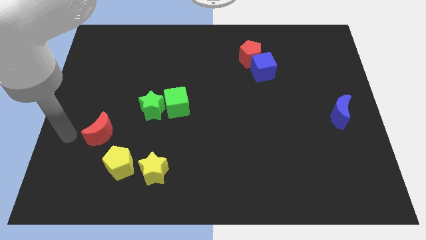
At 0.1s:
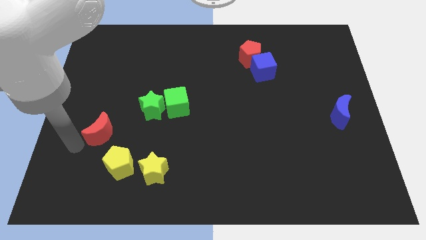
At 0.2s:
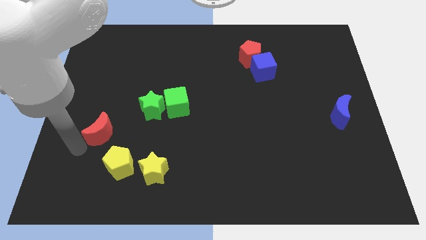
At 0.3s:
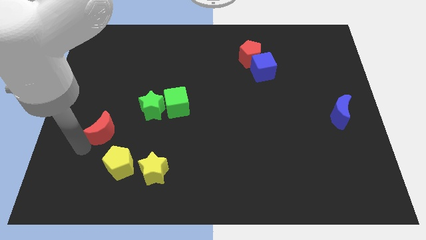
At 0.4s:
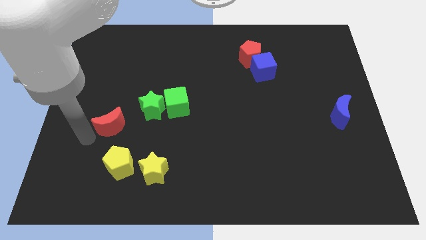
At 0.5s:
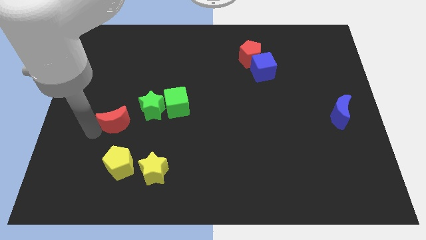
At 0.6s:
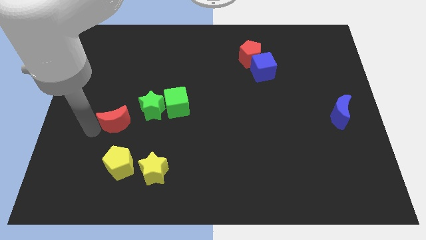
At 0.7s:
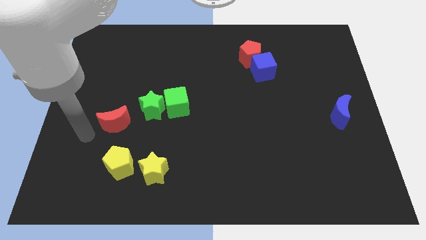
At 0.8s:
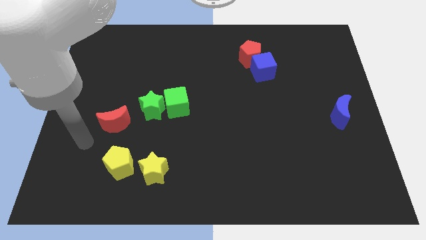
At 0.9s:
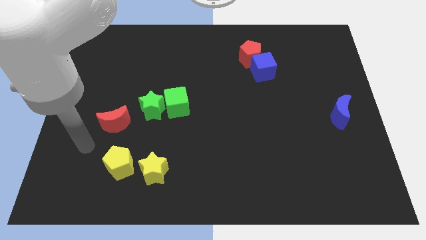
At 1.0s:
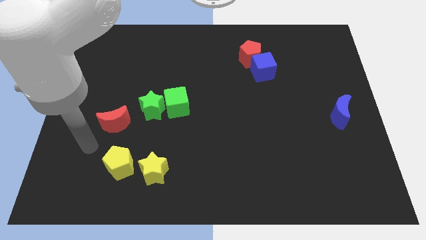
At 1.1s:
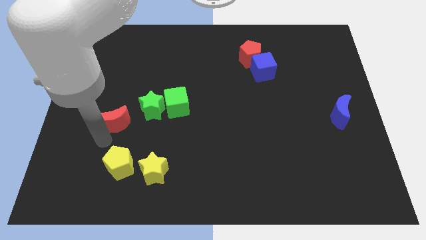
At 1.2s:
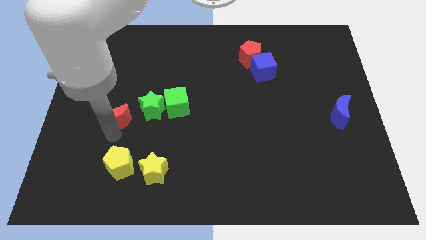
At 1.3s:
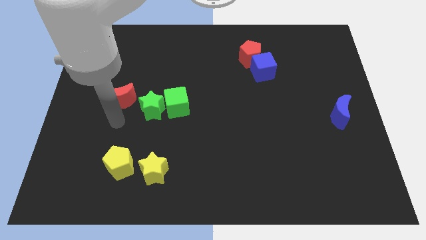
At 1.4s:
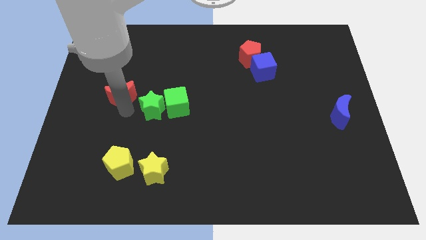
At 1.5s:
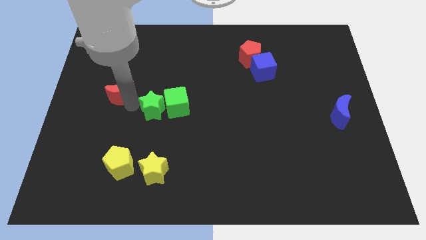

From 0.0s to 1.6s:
slightly move the red moon up

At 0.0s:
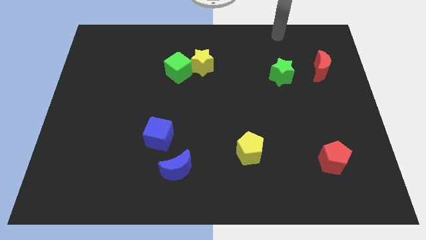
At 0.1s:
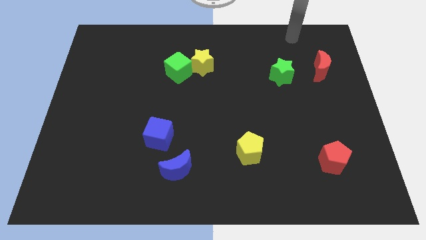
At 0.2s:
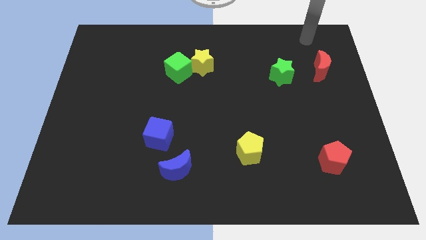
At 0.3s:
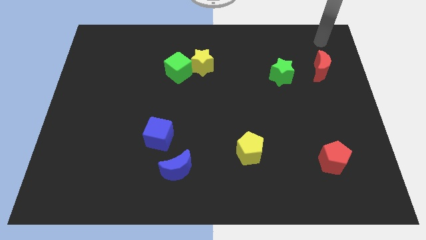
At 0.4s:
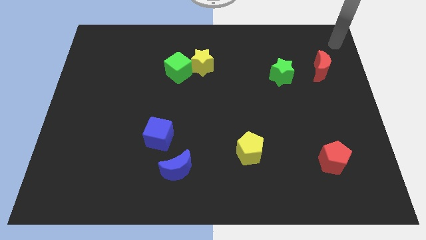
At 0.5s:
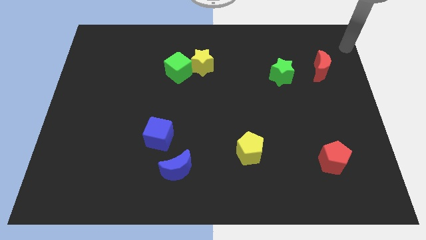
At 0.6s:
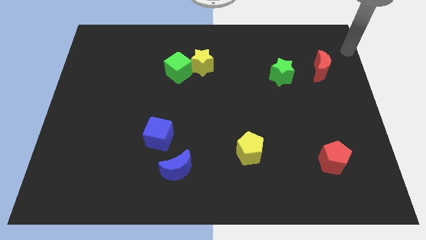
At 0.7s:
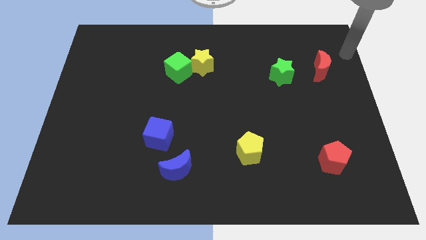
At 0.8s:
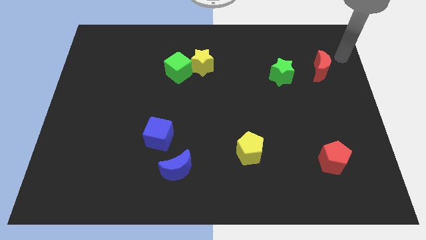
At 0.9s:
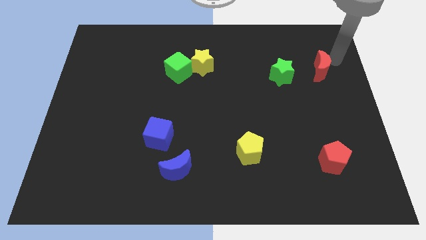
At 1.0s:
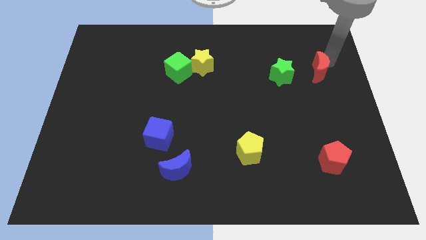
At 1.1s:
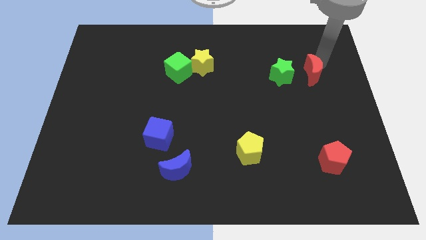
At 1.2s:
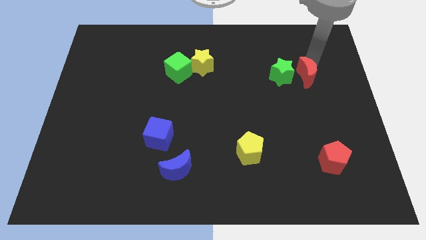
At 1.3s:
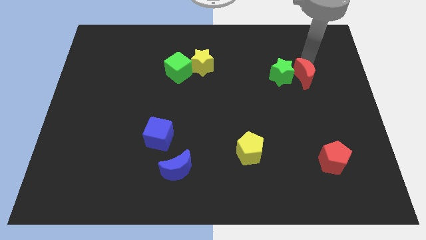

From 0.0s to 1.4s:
push the red crescent to the right of the green star

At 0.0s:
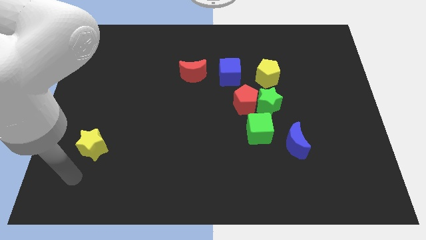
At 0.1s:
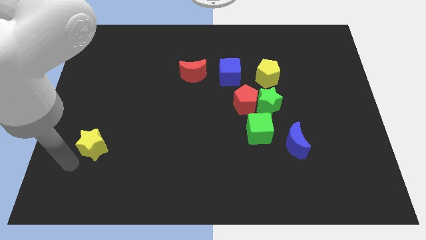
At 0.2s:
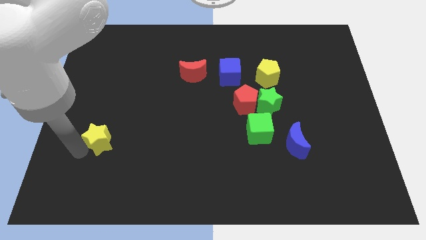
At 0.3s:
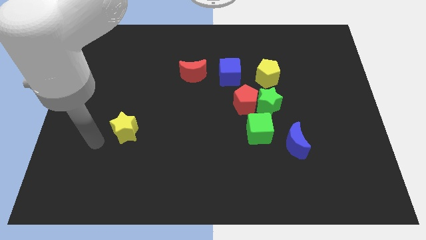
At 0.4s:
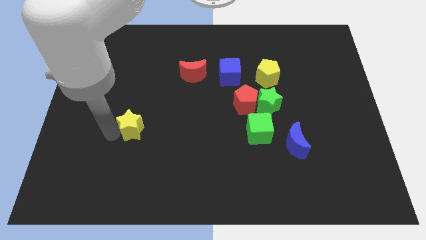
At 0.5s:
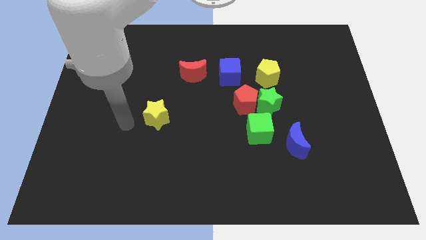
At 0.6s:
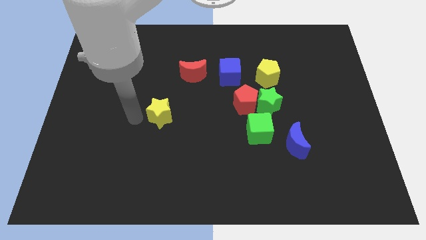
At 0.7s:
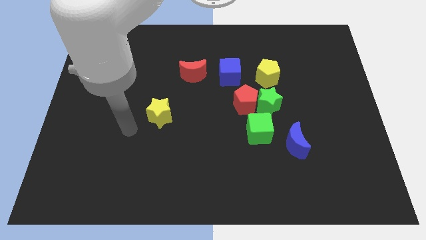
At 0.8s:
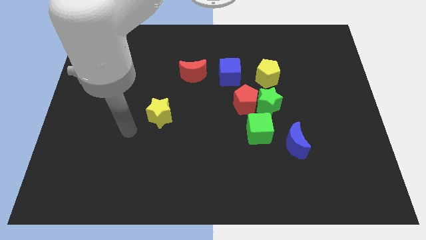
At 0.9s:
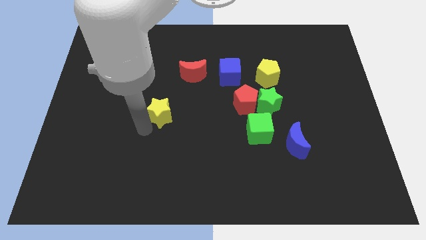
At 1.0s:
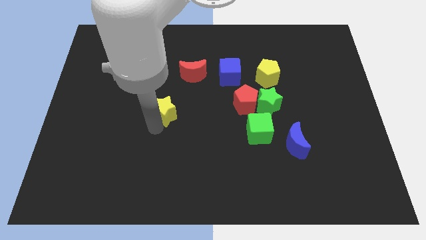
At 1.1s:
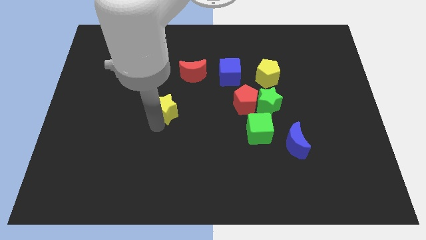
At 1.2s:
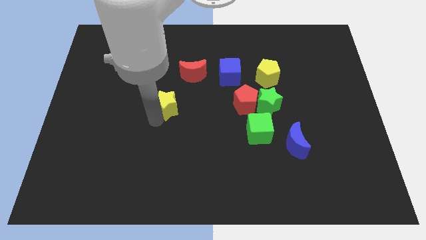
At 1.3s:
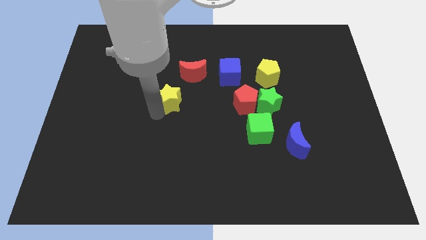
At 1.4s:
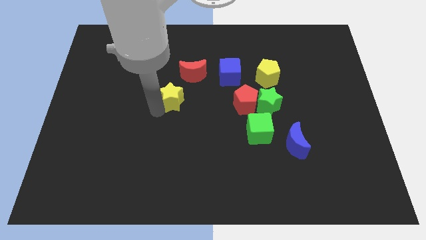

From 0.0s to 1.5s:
place the yellow star parallel to red pentagon

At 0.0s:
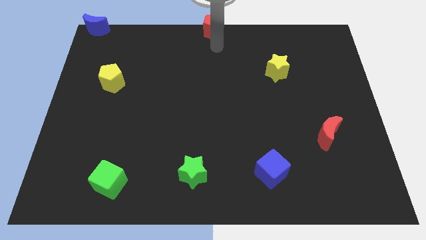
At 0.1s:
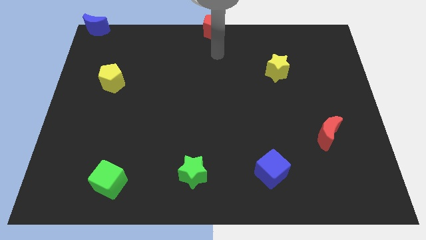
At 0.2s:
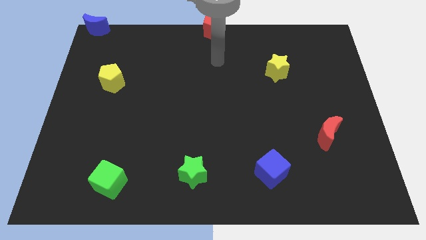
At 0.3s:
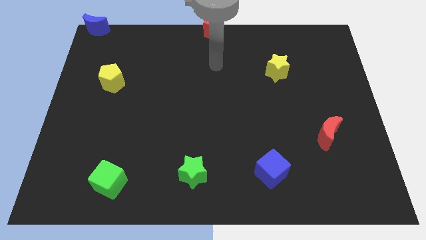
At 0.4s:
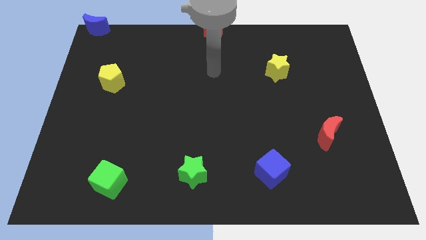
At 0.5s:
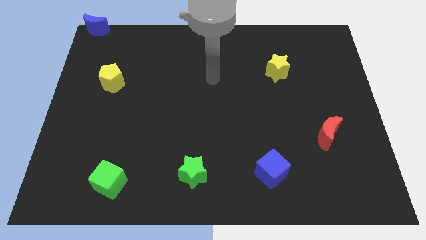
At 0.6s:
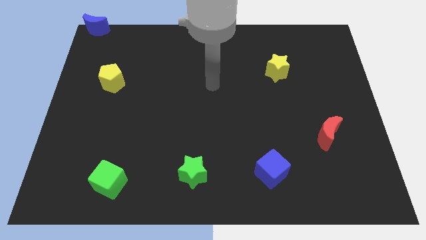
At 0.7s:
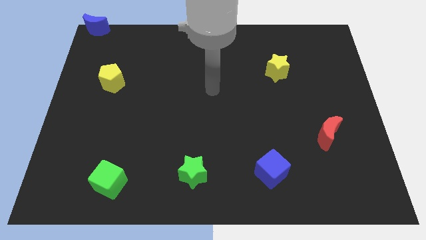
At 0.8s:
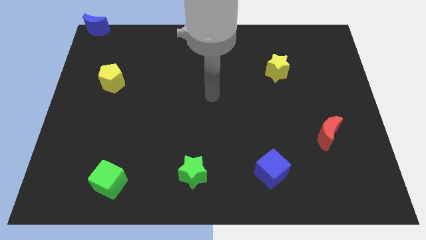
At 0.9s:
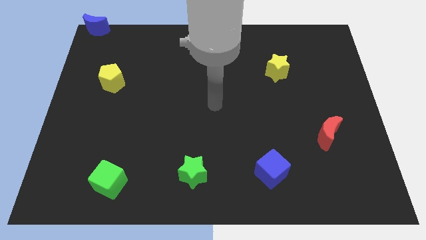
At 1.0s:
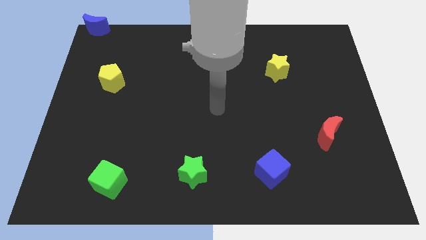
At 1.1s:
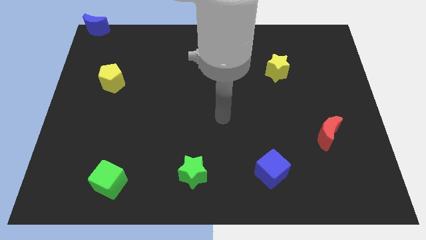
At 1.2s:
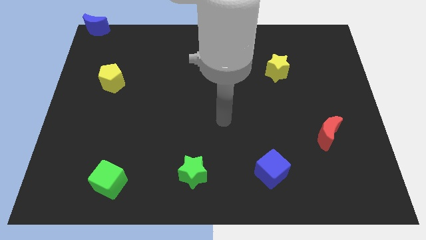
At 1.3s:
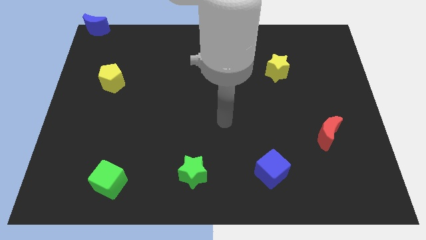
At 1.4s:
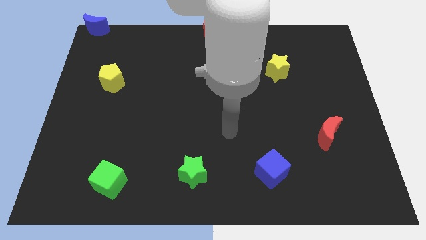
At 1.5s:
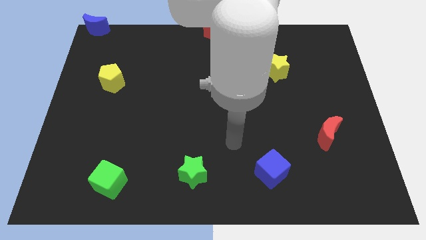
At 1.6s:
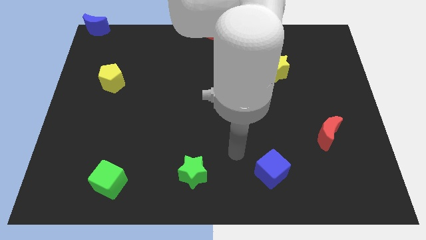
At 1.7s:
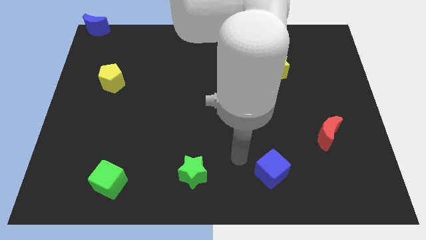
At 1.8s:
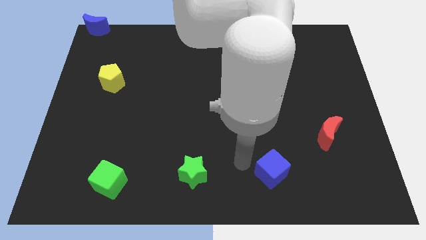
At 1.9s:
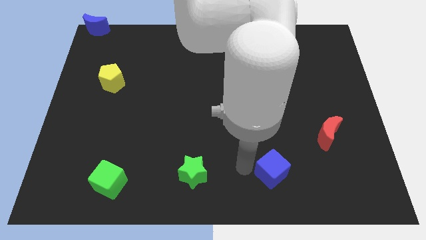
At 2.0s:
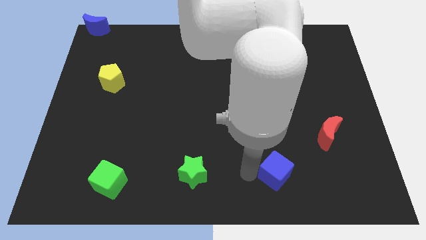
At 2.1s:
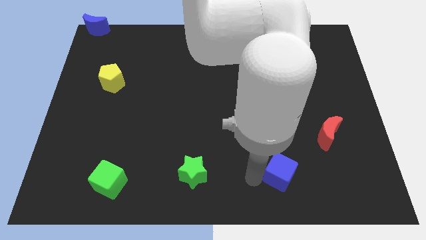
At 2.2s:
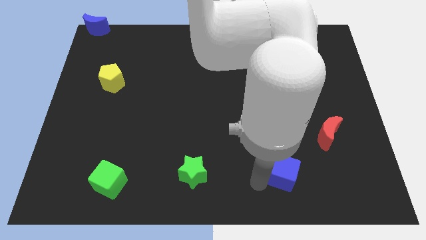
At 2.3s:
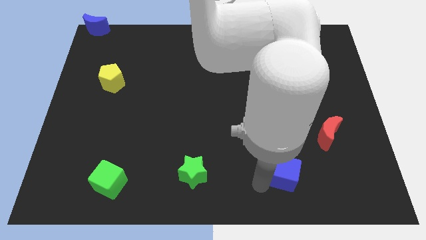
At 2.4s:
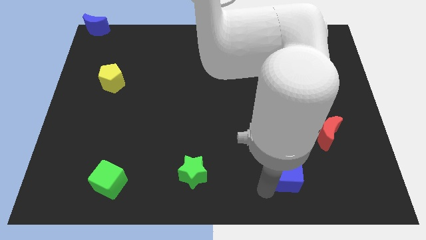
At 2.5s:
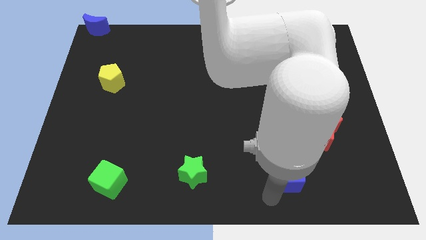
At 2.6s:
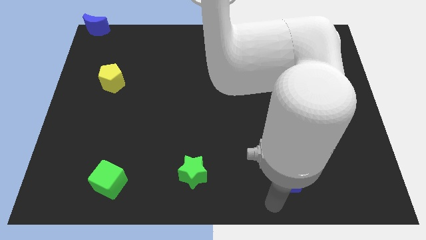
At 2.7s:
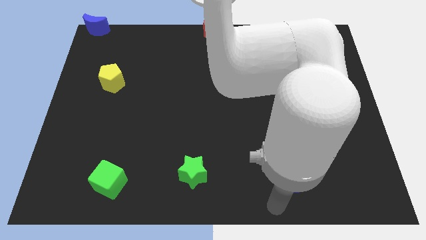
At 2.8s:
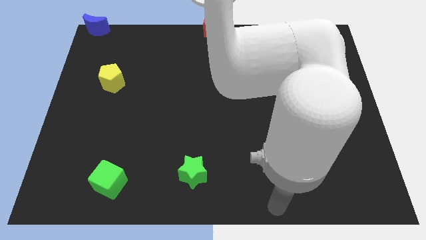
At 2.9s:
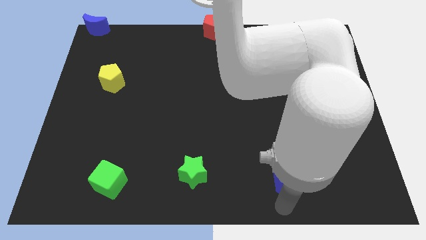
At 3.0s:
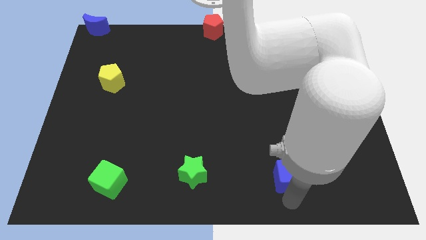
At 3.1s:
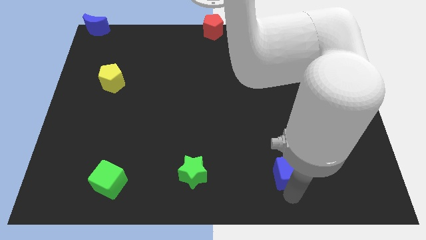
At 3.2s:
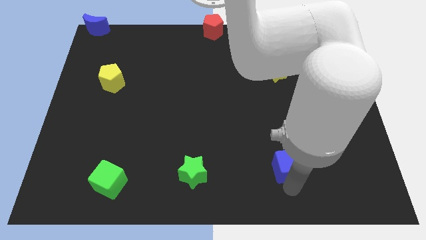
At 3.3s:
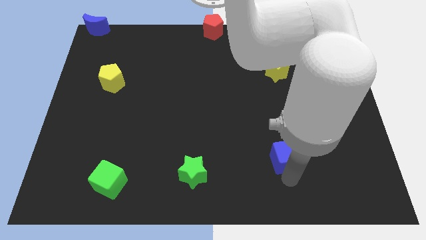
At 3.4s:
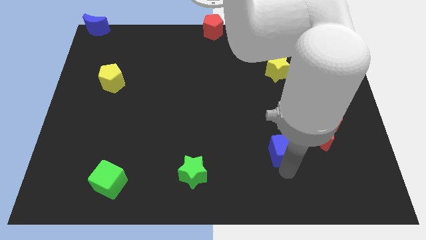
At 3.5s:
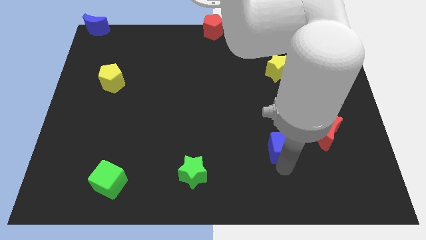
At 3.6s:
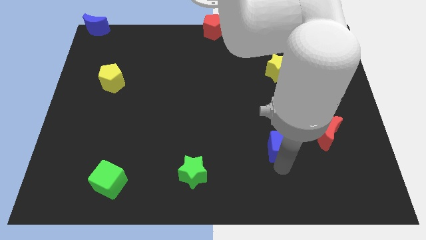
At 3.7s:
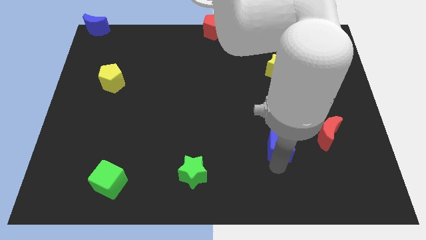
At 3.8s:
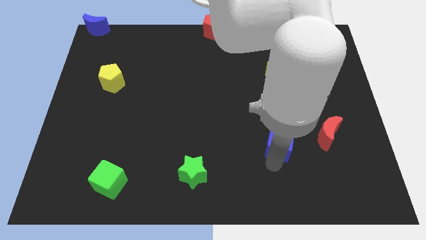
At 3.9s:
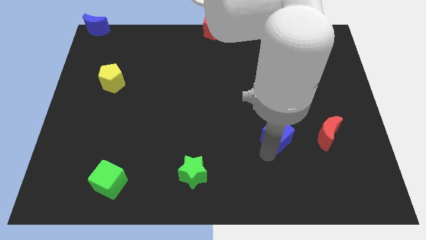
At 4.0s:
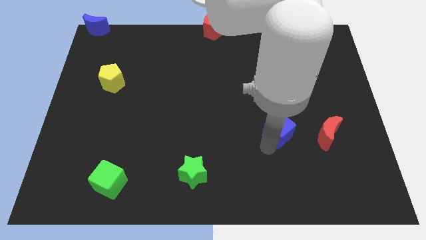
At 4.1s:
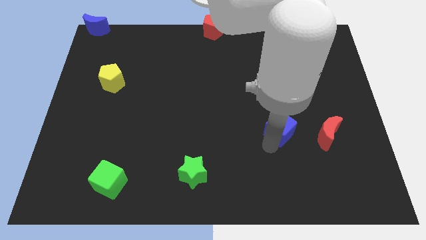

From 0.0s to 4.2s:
place blue cube to the left of red moon

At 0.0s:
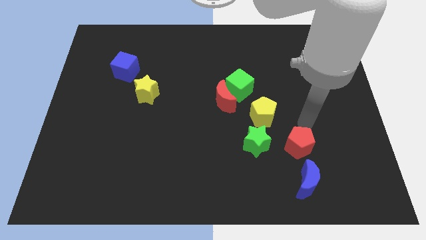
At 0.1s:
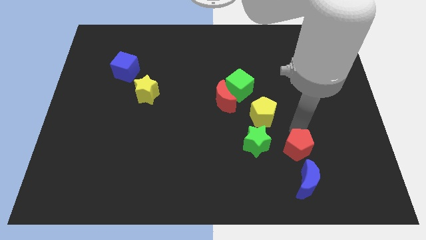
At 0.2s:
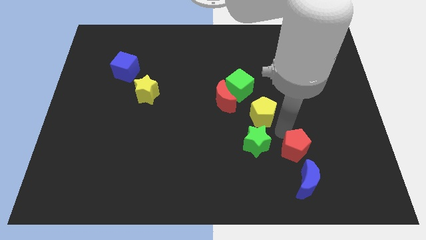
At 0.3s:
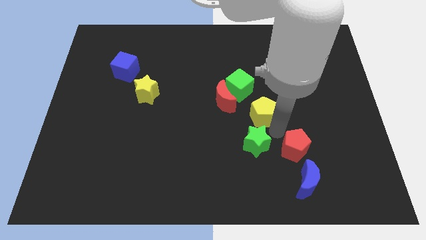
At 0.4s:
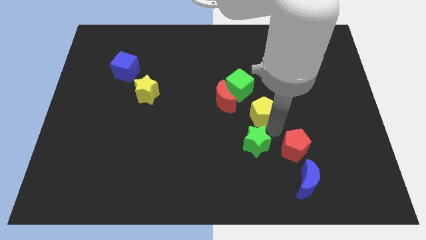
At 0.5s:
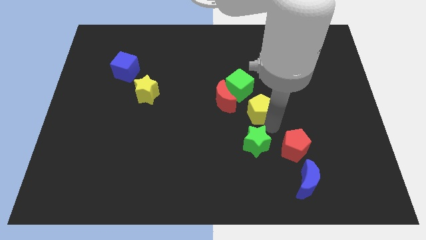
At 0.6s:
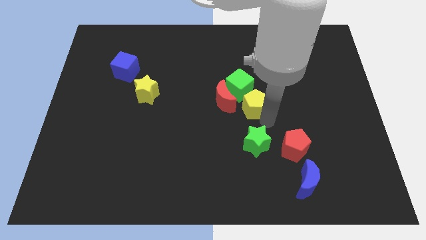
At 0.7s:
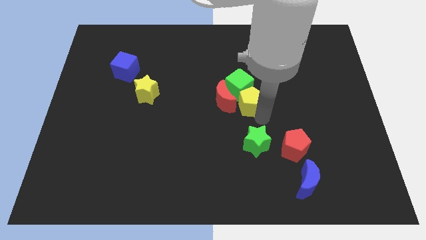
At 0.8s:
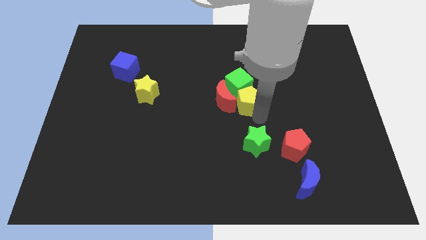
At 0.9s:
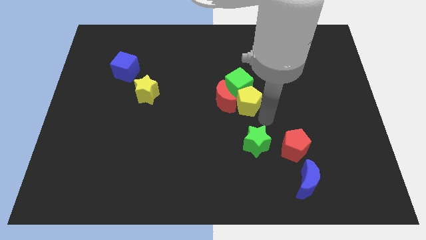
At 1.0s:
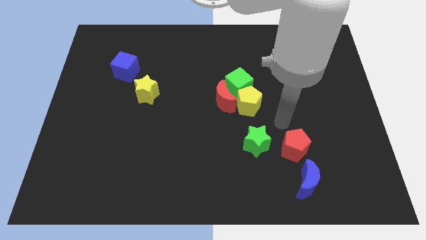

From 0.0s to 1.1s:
push yellow pentagon into the green cube
